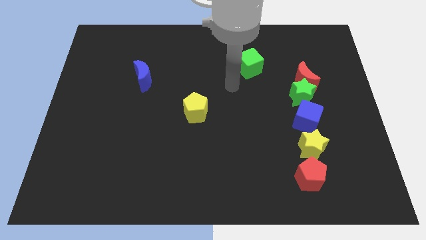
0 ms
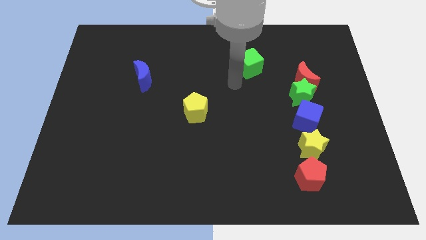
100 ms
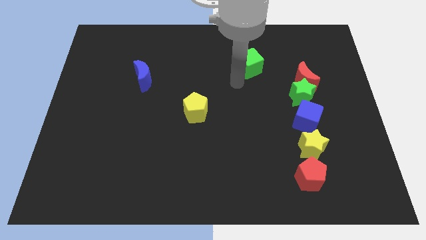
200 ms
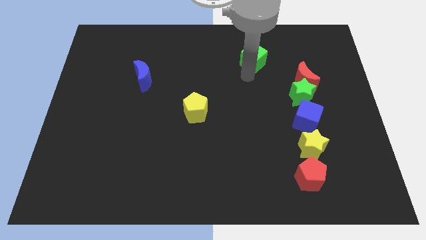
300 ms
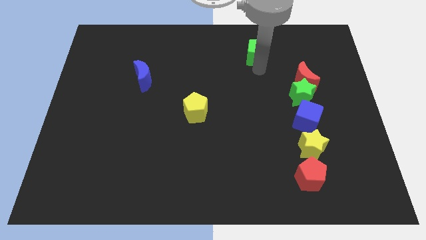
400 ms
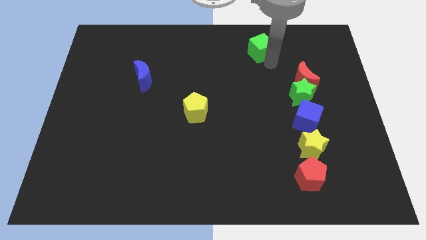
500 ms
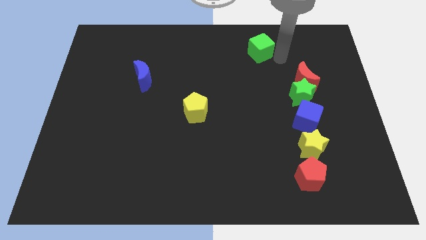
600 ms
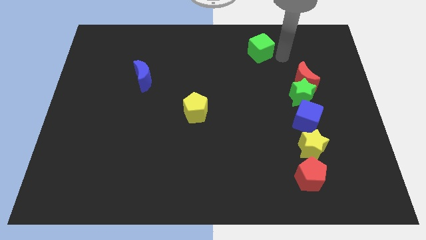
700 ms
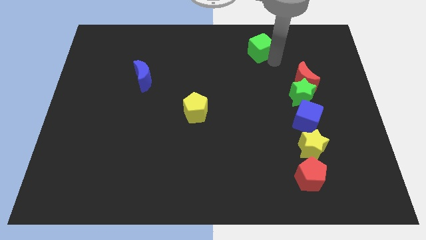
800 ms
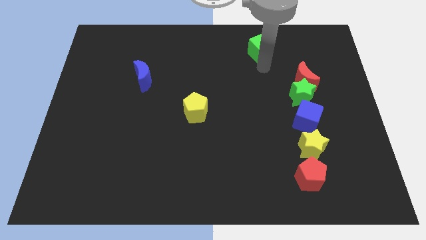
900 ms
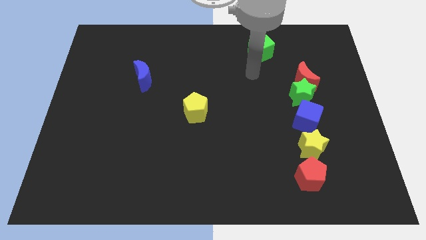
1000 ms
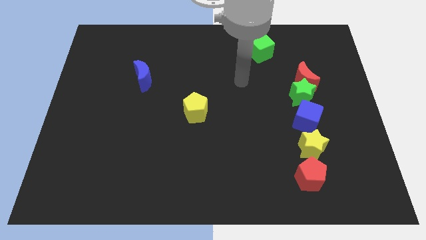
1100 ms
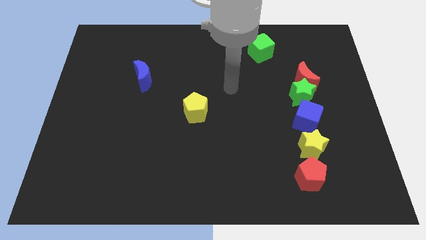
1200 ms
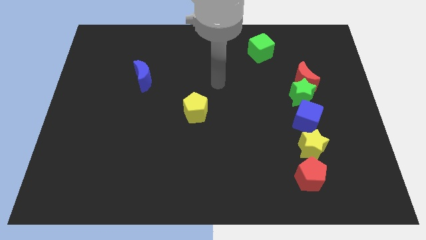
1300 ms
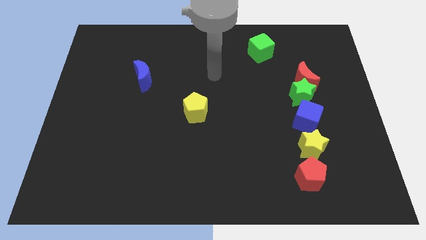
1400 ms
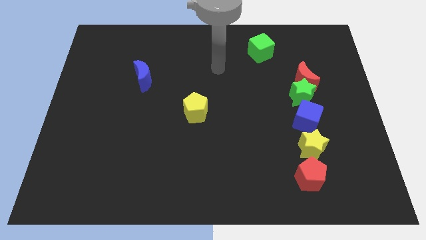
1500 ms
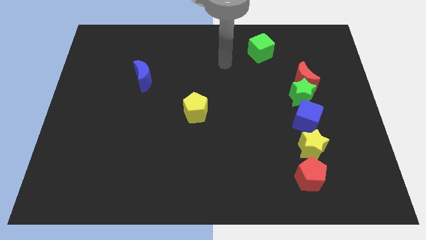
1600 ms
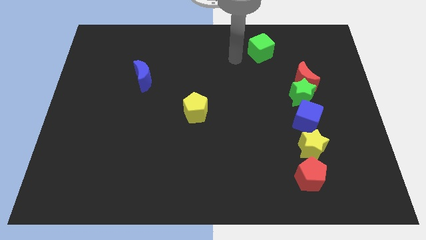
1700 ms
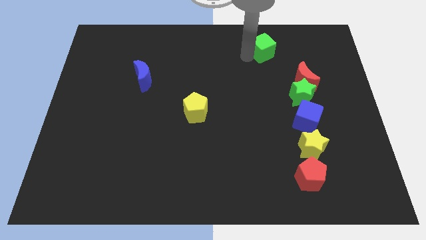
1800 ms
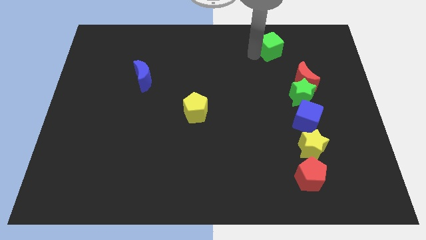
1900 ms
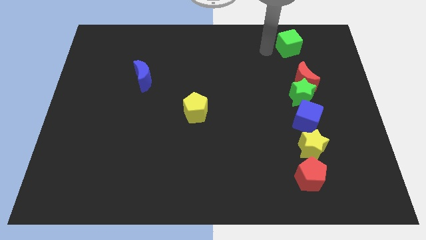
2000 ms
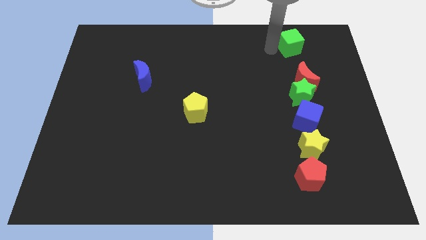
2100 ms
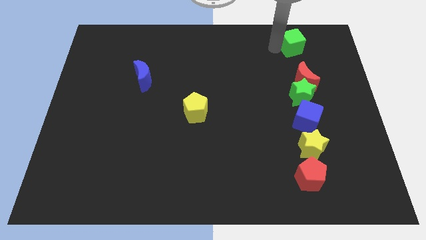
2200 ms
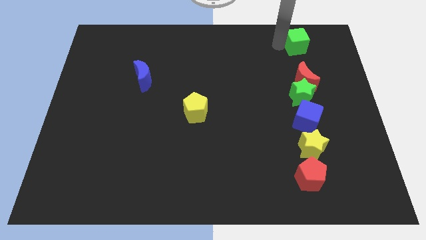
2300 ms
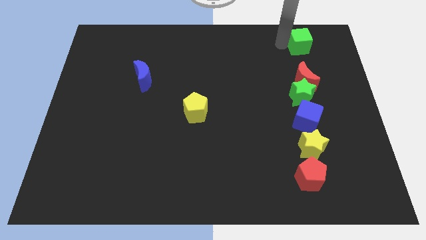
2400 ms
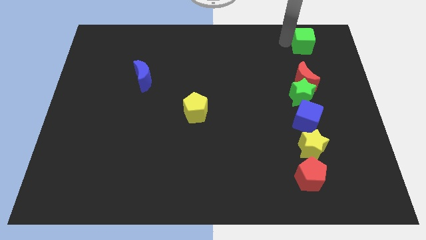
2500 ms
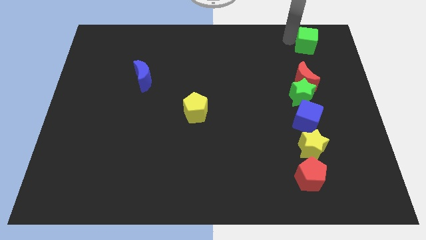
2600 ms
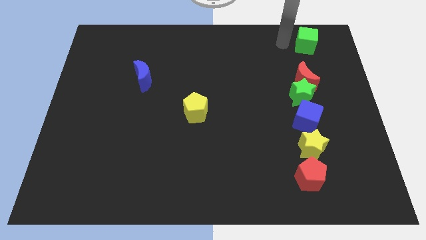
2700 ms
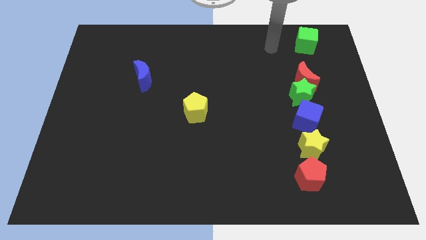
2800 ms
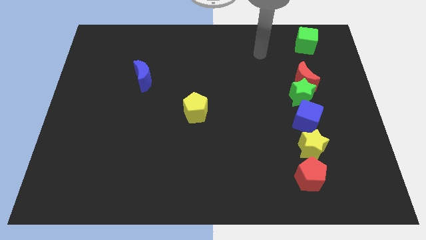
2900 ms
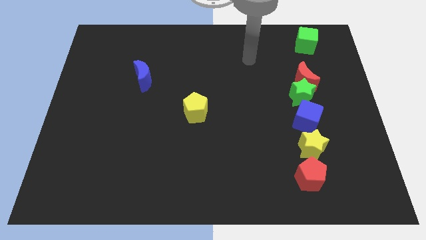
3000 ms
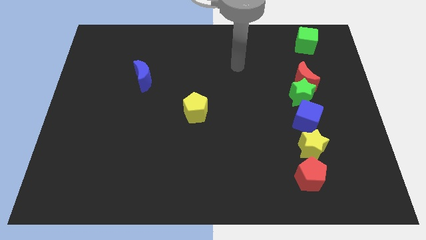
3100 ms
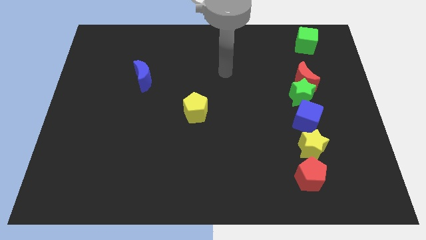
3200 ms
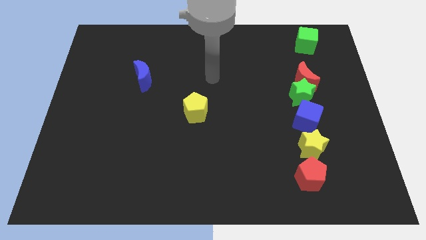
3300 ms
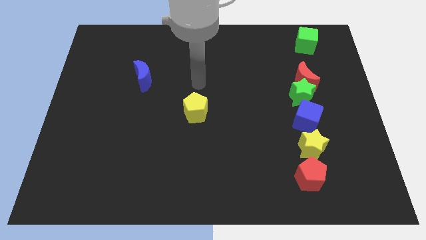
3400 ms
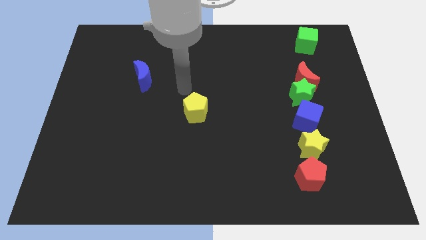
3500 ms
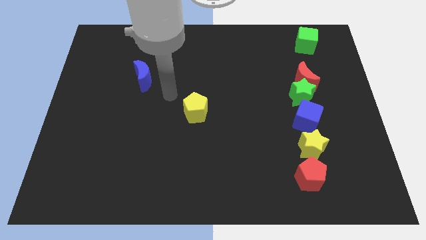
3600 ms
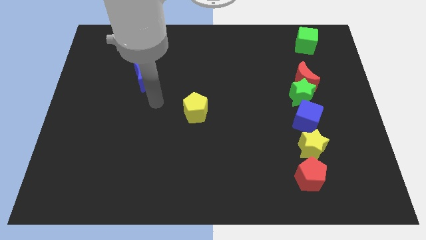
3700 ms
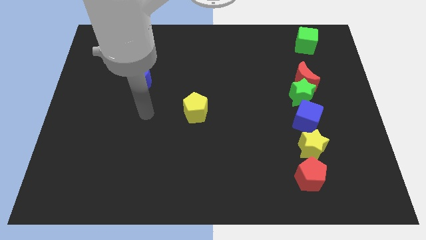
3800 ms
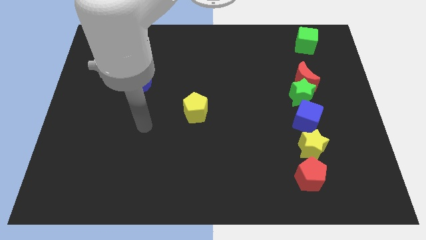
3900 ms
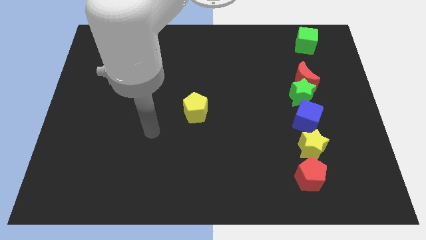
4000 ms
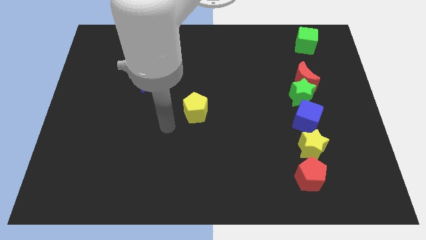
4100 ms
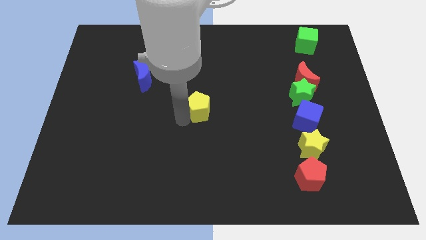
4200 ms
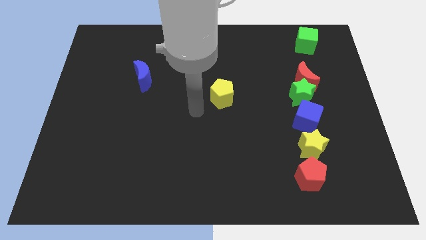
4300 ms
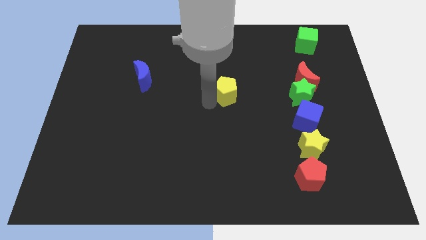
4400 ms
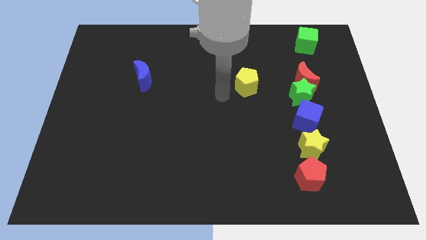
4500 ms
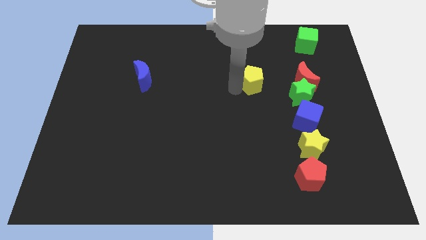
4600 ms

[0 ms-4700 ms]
push the green cube above the red moon

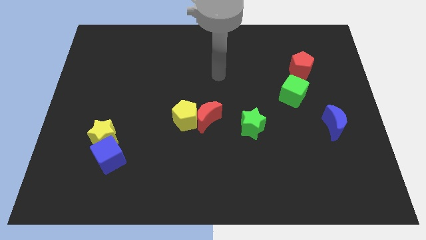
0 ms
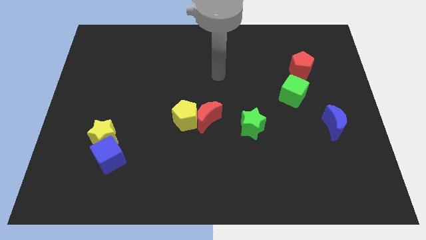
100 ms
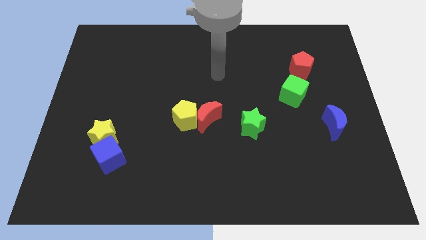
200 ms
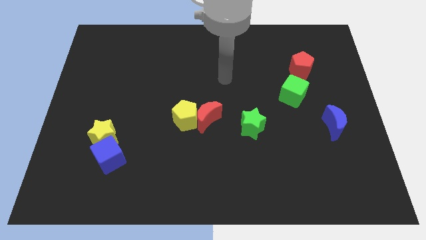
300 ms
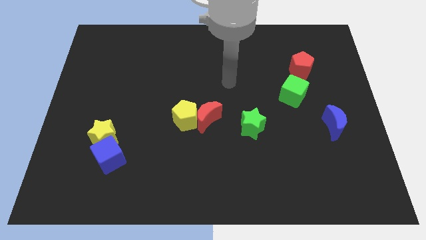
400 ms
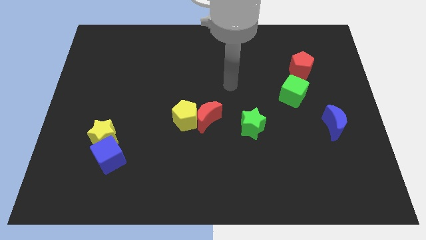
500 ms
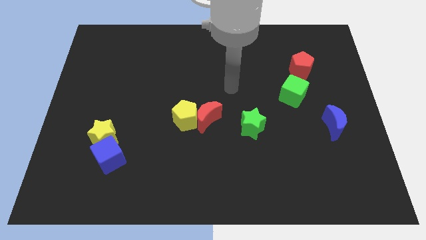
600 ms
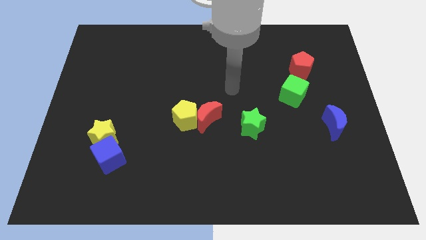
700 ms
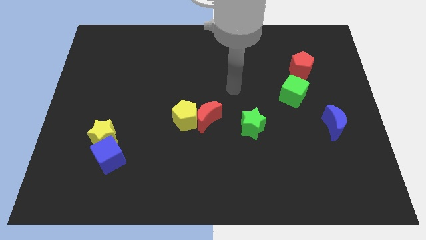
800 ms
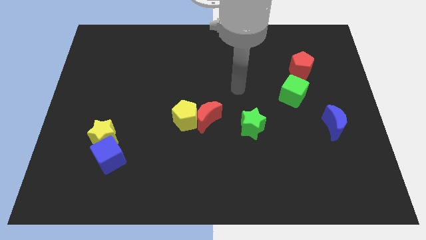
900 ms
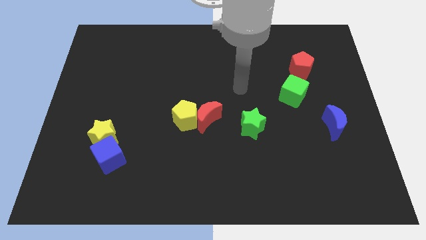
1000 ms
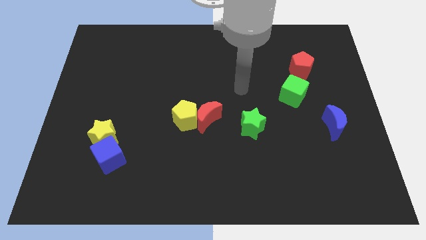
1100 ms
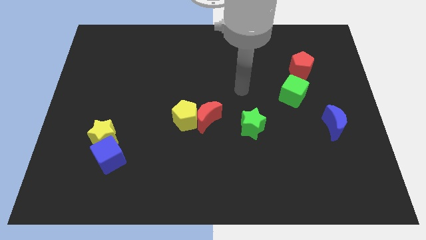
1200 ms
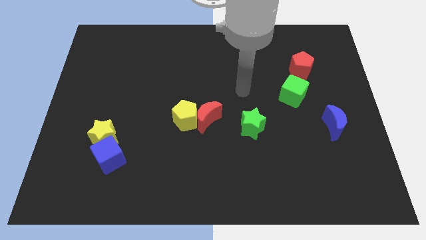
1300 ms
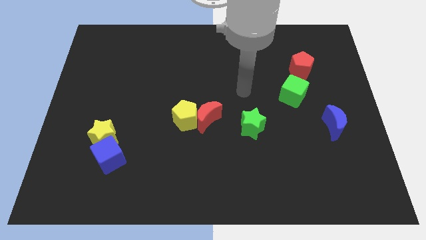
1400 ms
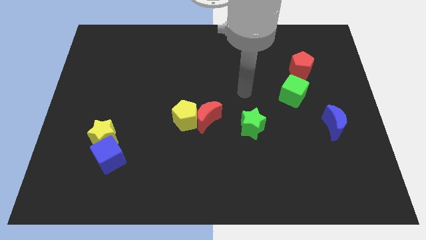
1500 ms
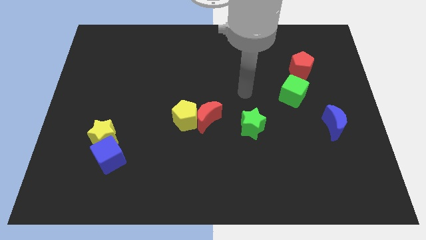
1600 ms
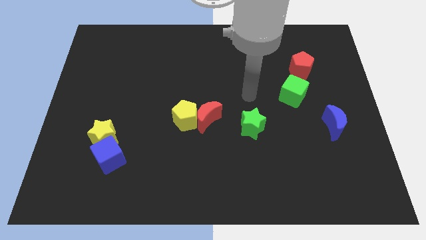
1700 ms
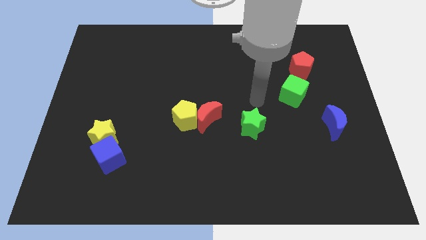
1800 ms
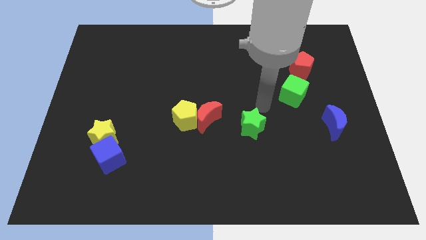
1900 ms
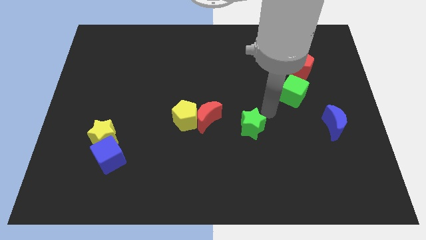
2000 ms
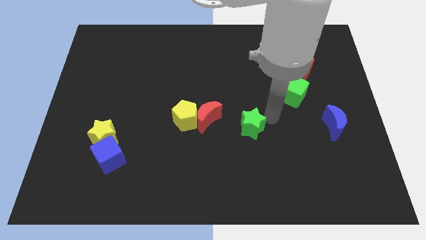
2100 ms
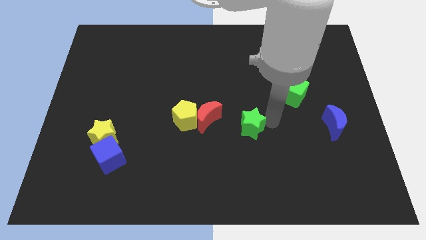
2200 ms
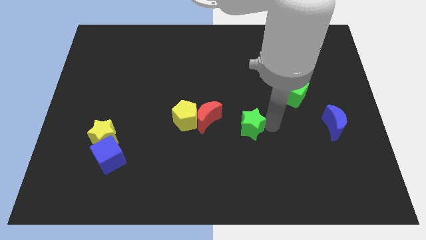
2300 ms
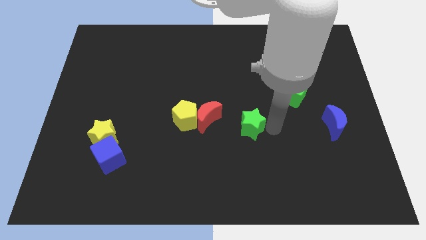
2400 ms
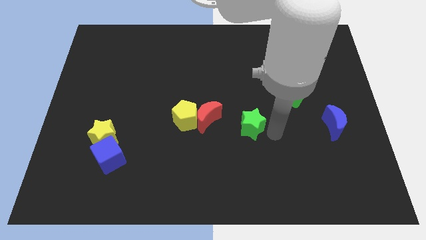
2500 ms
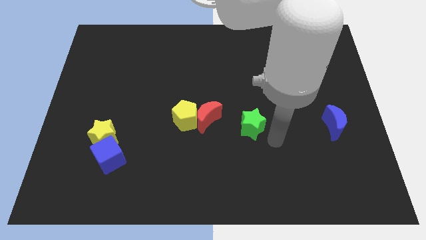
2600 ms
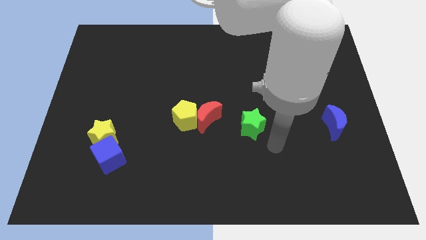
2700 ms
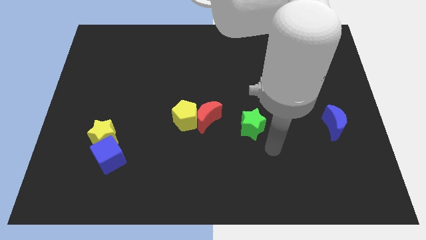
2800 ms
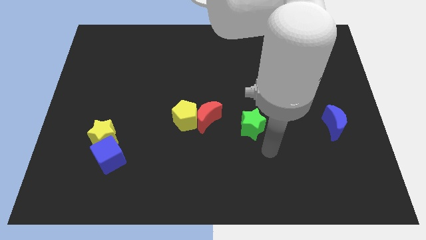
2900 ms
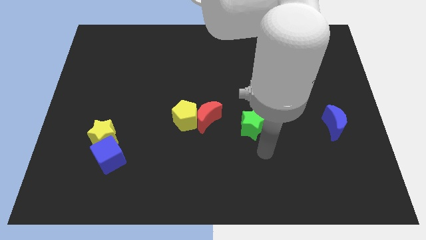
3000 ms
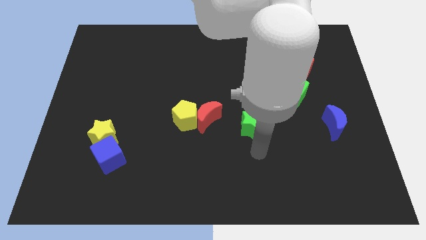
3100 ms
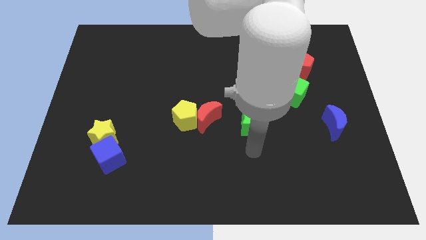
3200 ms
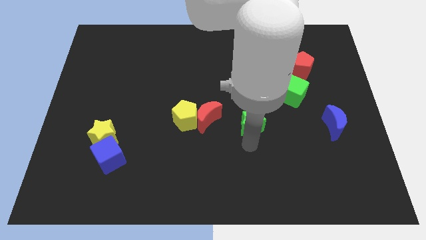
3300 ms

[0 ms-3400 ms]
place your arm below the green star

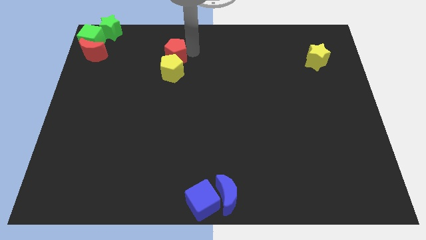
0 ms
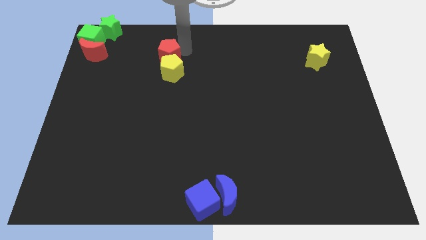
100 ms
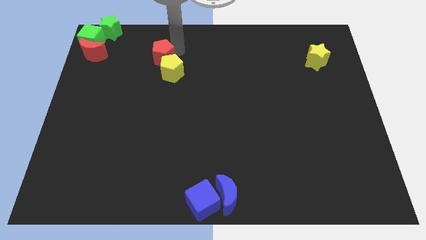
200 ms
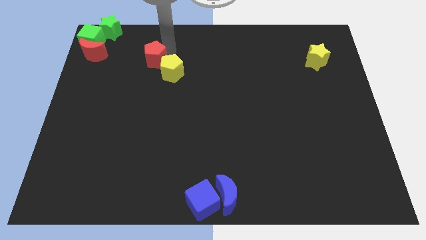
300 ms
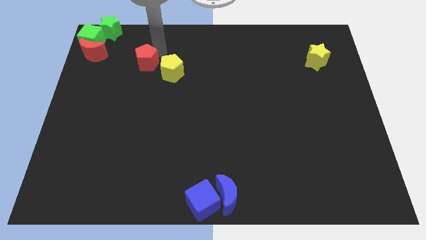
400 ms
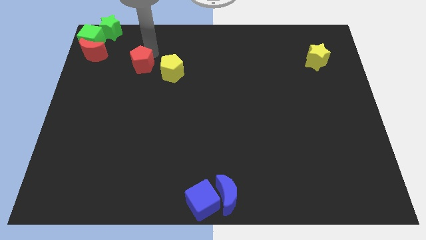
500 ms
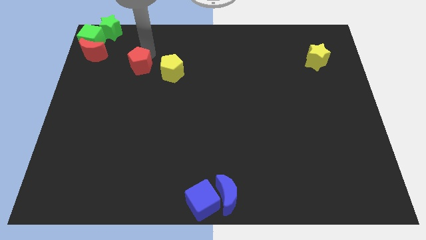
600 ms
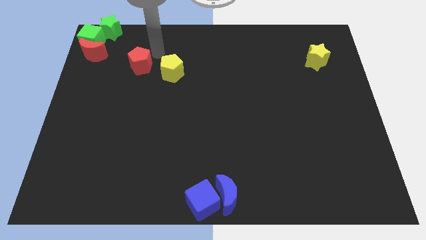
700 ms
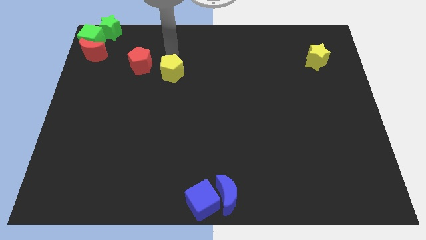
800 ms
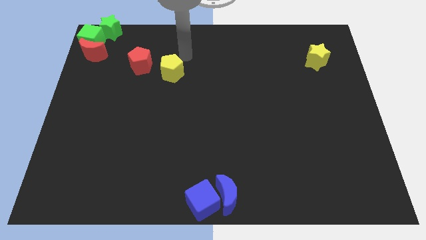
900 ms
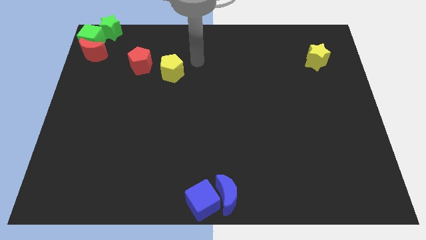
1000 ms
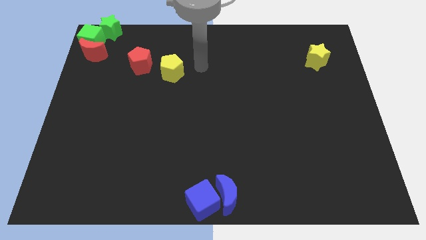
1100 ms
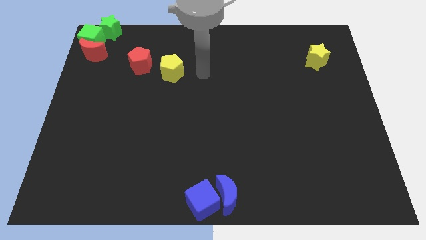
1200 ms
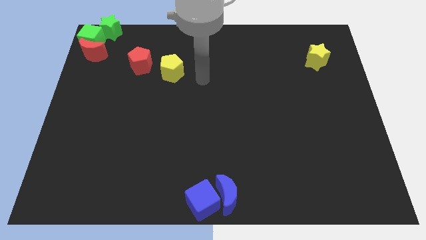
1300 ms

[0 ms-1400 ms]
place red pentagon in between the red moon and yellow pentagon
